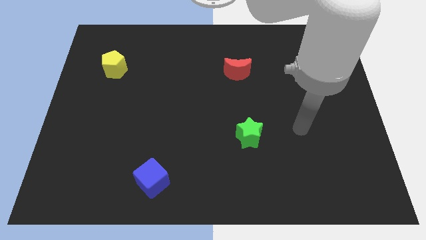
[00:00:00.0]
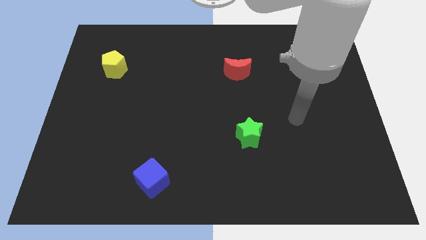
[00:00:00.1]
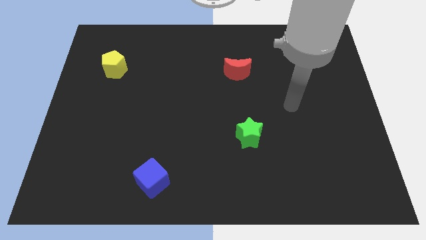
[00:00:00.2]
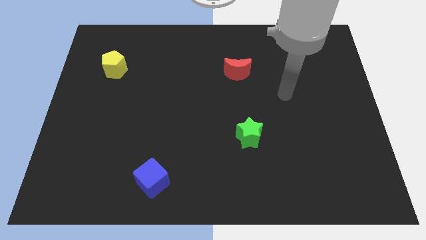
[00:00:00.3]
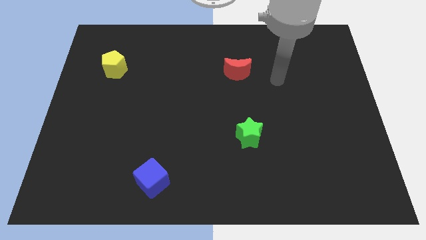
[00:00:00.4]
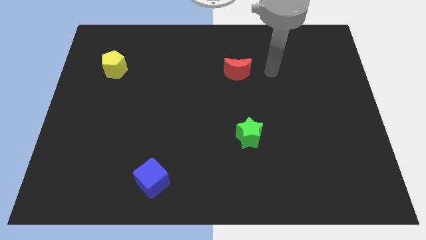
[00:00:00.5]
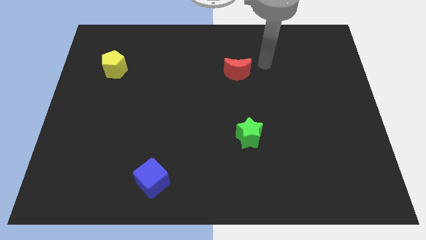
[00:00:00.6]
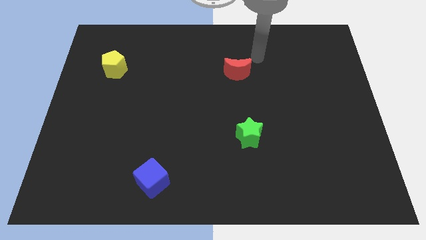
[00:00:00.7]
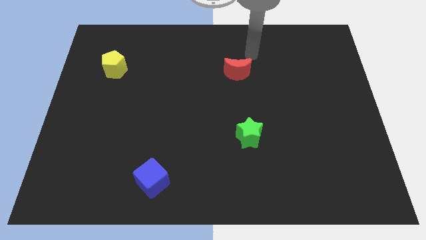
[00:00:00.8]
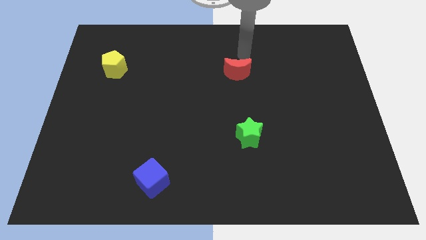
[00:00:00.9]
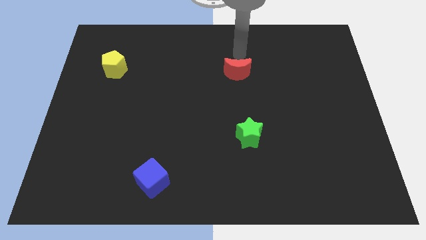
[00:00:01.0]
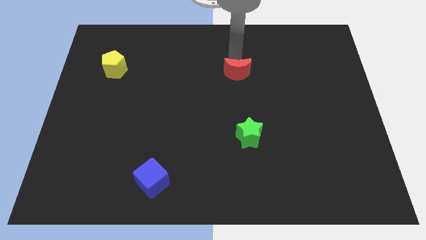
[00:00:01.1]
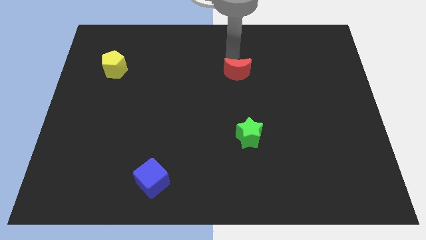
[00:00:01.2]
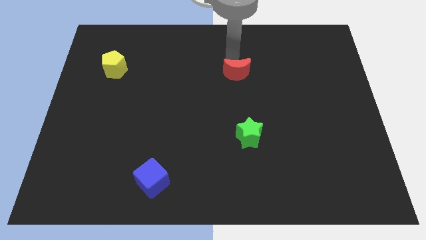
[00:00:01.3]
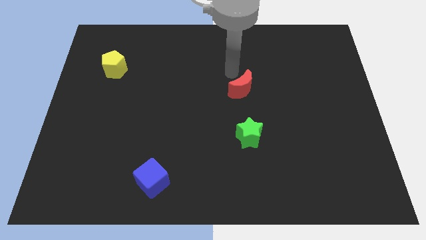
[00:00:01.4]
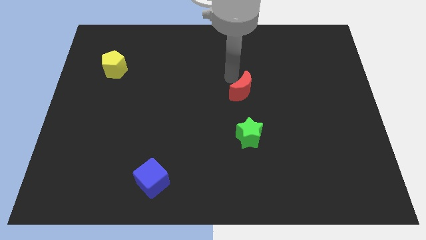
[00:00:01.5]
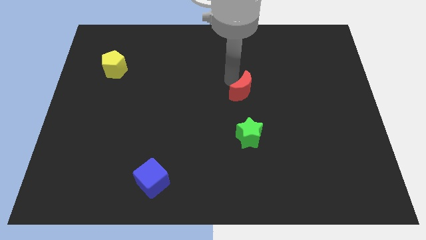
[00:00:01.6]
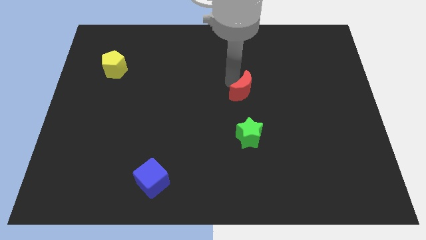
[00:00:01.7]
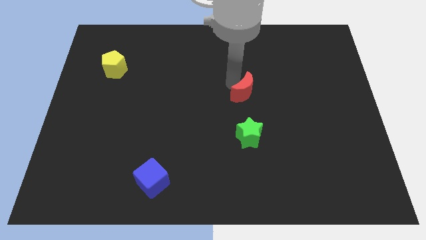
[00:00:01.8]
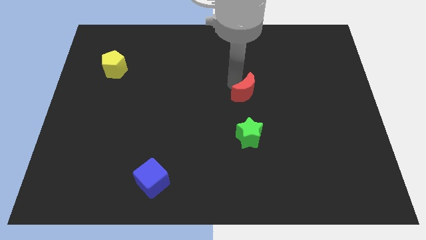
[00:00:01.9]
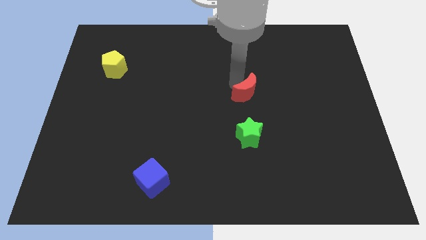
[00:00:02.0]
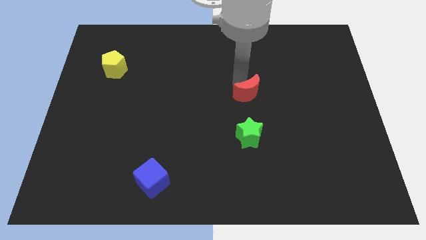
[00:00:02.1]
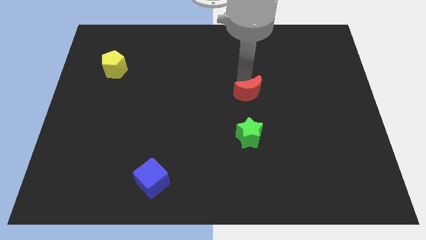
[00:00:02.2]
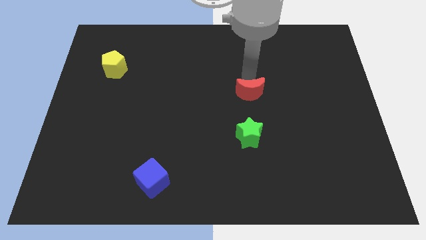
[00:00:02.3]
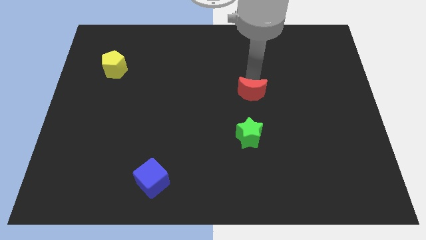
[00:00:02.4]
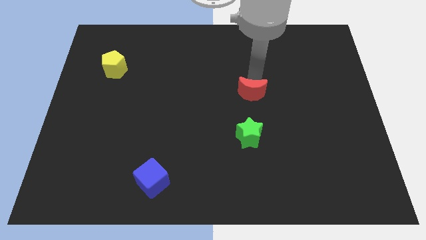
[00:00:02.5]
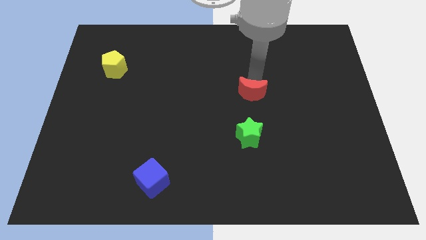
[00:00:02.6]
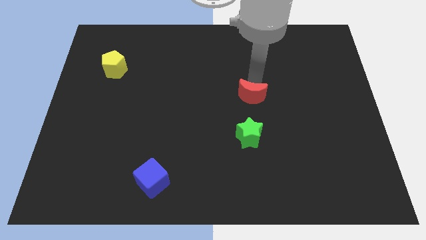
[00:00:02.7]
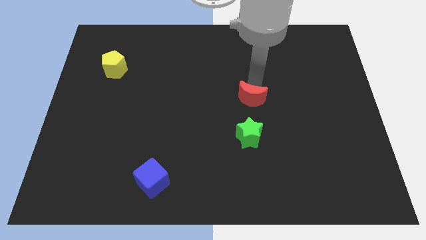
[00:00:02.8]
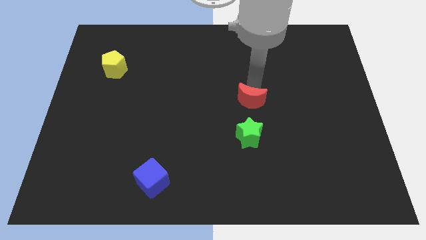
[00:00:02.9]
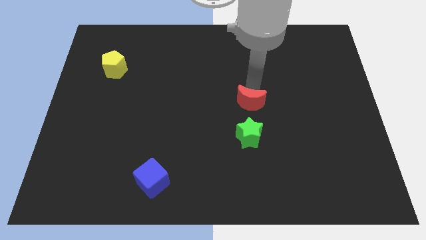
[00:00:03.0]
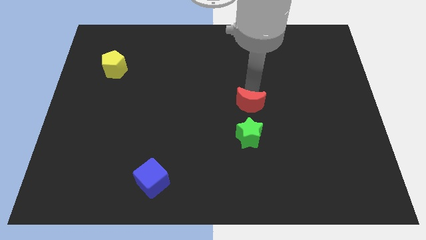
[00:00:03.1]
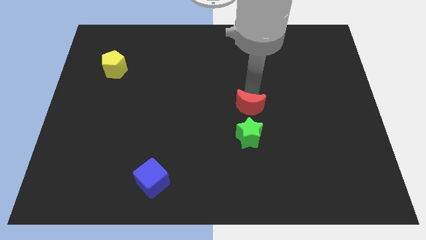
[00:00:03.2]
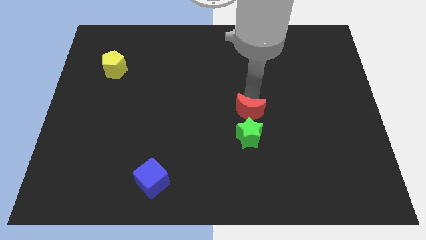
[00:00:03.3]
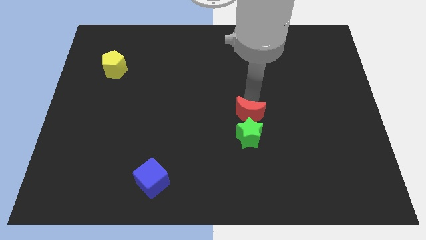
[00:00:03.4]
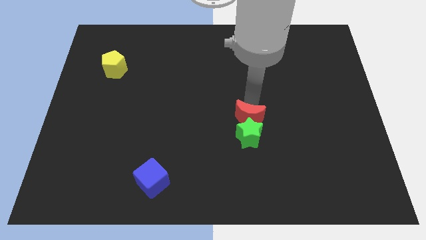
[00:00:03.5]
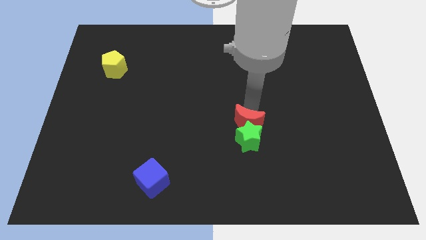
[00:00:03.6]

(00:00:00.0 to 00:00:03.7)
slide the moon towards the green block

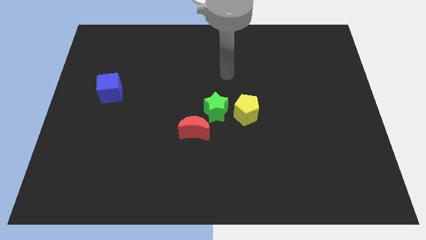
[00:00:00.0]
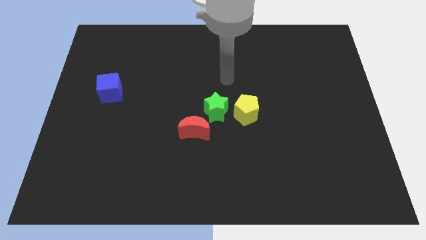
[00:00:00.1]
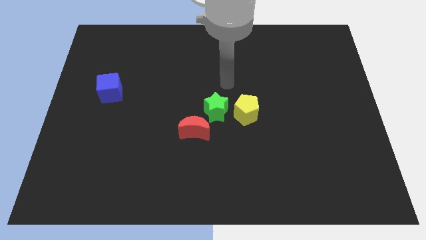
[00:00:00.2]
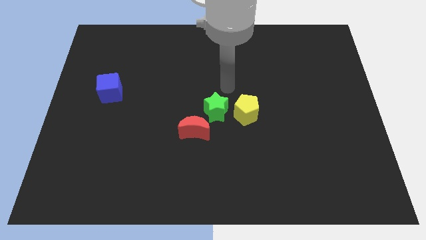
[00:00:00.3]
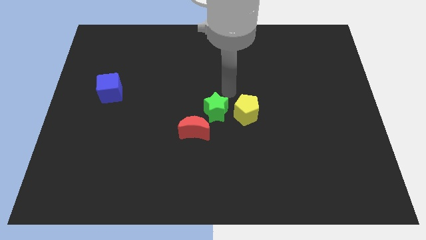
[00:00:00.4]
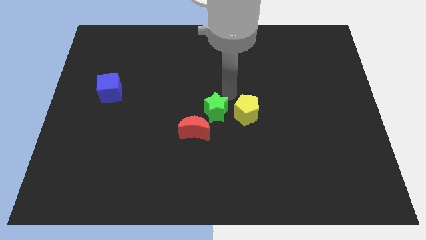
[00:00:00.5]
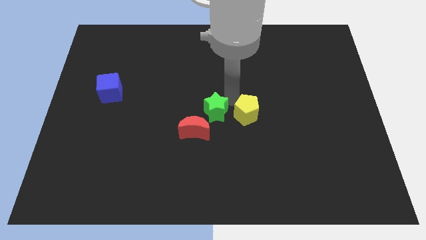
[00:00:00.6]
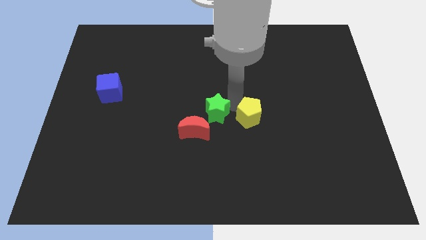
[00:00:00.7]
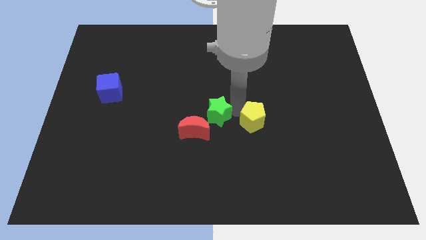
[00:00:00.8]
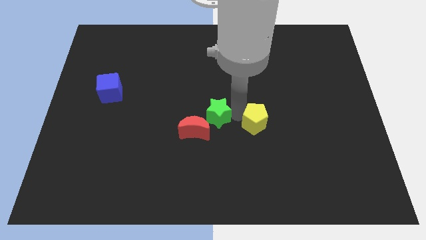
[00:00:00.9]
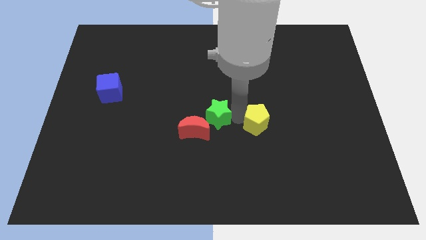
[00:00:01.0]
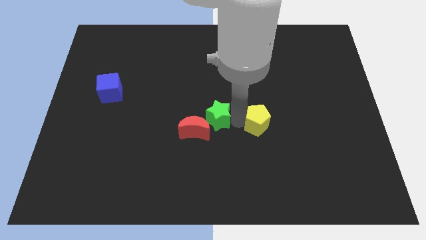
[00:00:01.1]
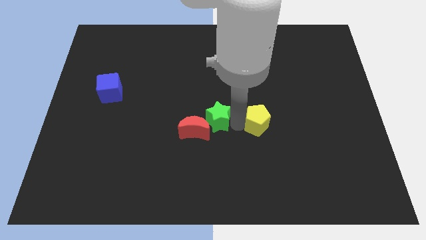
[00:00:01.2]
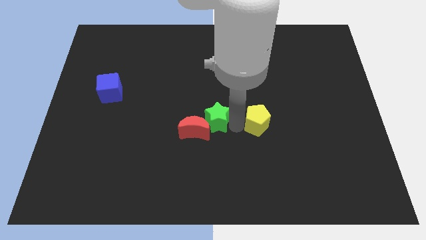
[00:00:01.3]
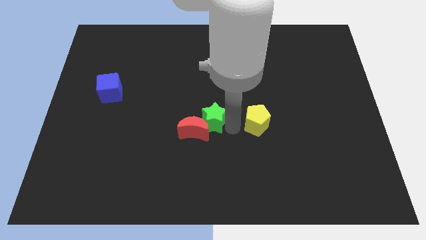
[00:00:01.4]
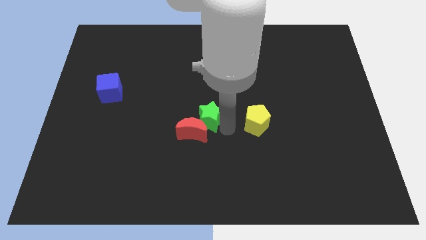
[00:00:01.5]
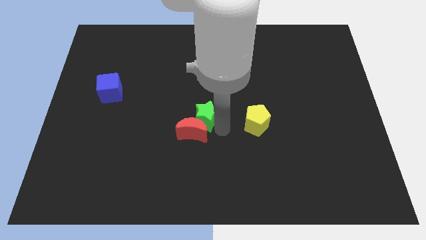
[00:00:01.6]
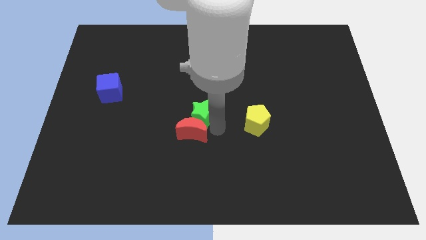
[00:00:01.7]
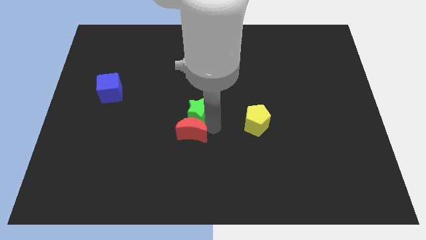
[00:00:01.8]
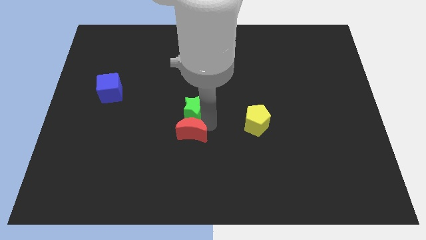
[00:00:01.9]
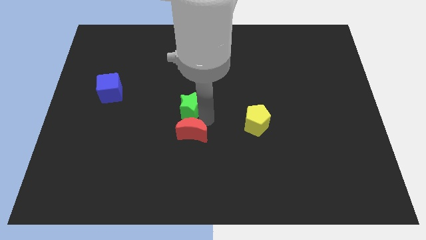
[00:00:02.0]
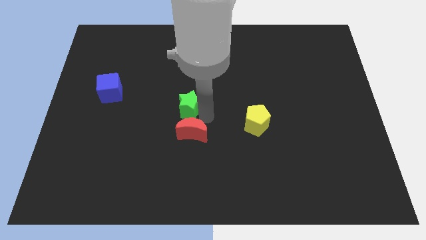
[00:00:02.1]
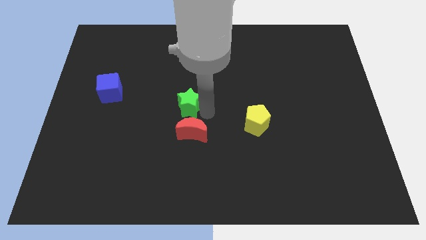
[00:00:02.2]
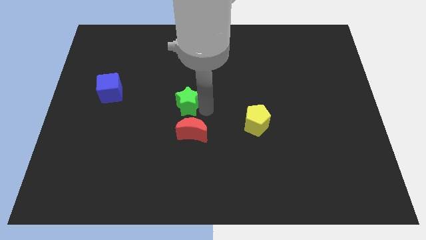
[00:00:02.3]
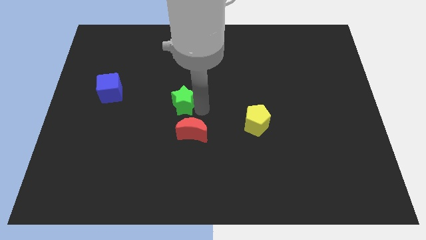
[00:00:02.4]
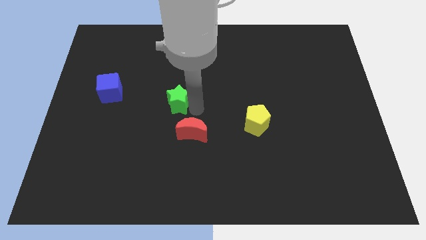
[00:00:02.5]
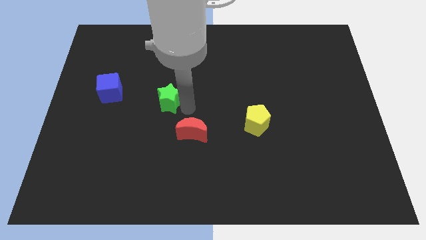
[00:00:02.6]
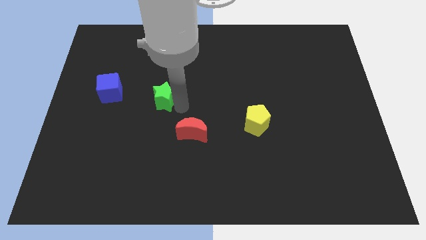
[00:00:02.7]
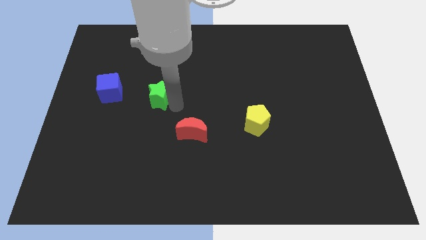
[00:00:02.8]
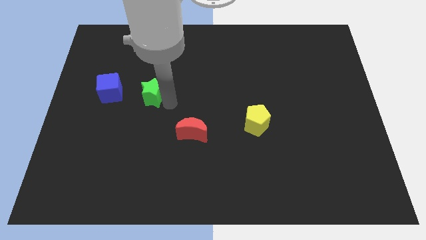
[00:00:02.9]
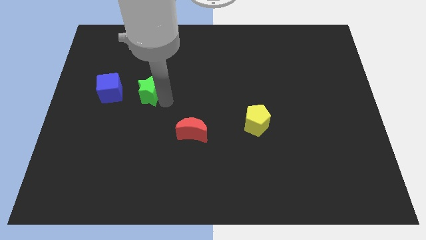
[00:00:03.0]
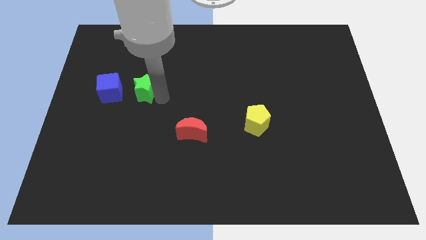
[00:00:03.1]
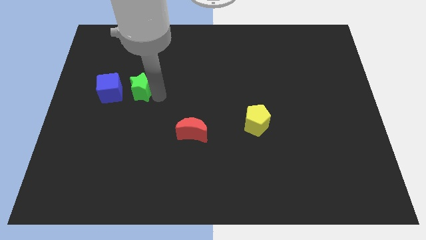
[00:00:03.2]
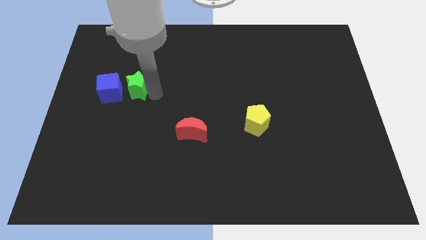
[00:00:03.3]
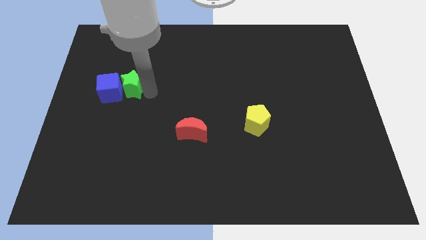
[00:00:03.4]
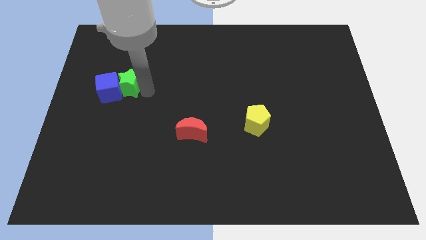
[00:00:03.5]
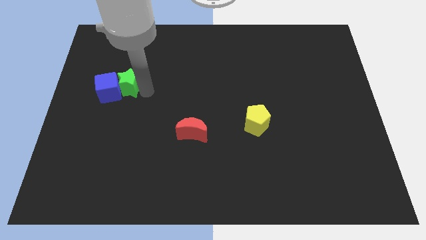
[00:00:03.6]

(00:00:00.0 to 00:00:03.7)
push the green star towards the blue block

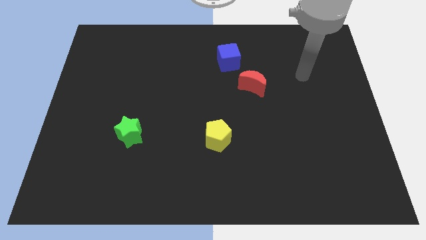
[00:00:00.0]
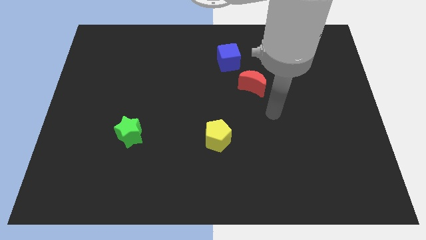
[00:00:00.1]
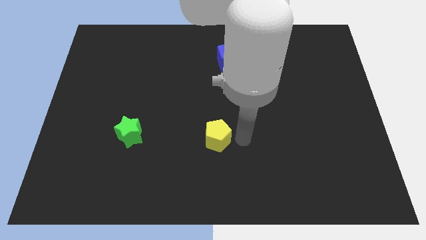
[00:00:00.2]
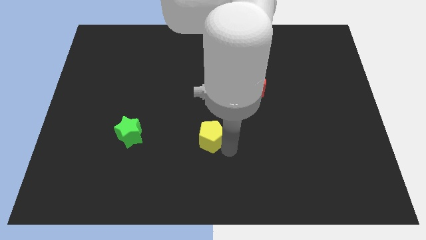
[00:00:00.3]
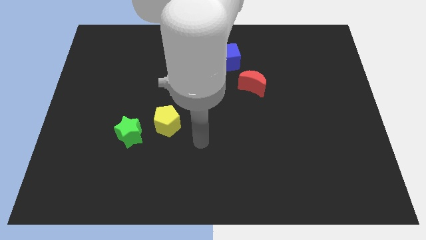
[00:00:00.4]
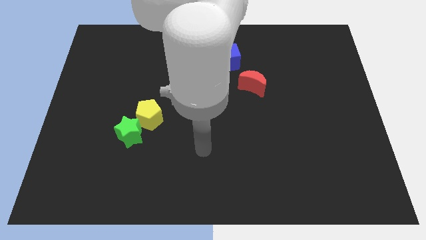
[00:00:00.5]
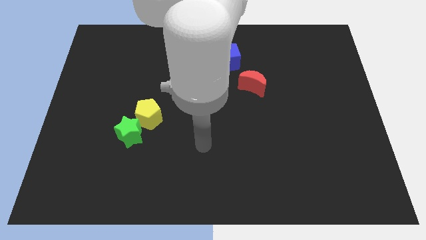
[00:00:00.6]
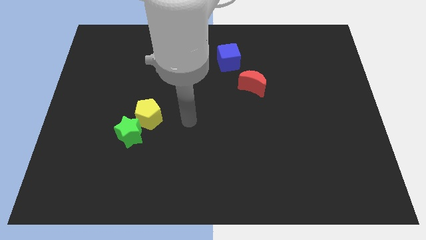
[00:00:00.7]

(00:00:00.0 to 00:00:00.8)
move the pentagon towards the green block

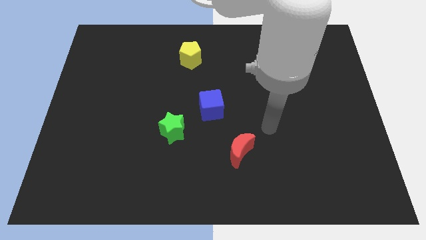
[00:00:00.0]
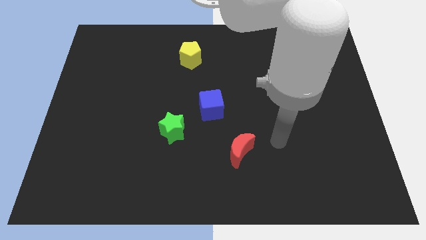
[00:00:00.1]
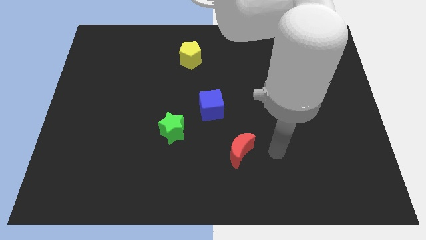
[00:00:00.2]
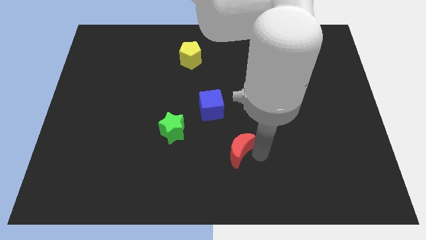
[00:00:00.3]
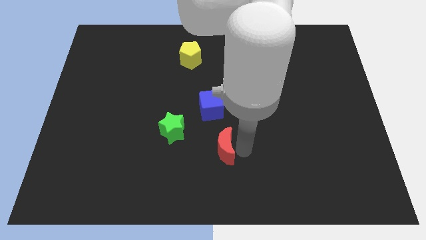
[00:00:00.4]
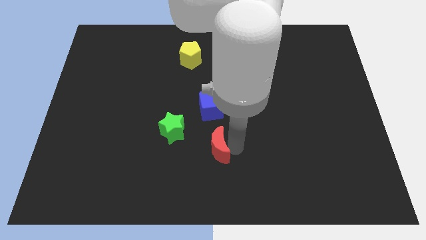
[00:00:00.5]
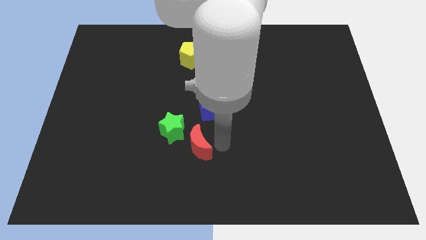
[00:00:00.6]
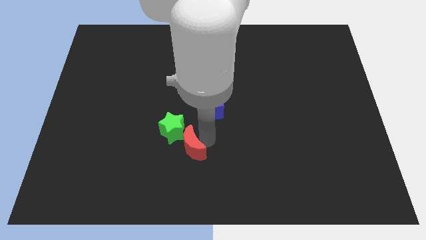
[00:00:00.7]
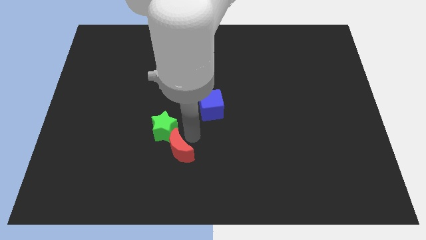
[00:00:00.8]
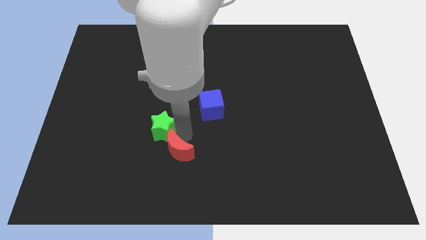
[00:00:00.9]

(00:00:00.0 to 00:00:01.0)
push the moon next to the star
